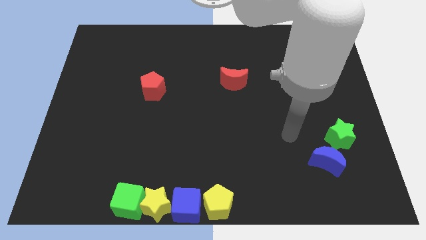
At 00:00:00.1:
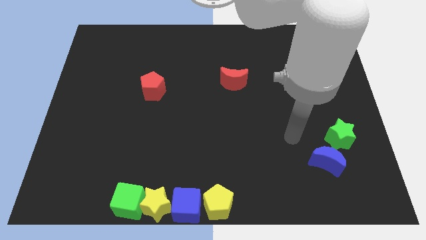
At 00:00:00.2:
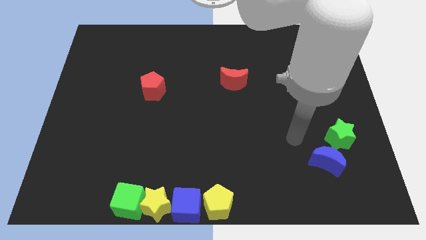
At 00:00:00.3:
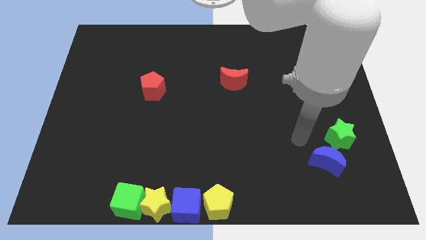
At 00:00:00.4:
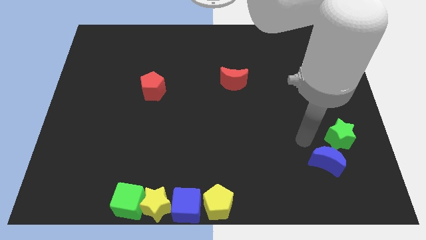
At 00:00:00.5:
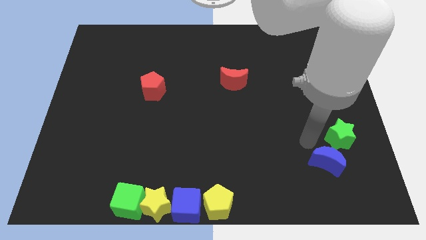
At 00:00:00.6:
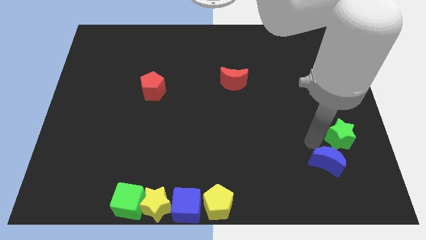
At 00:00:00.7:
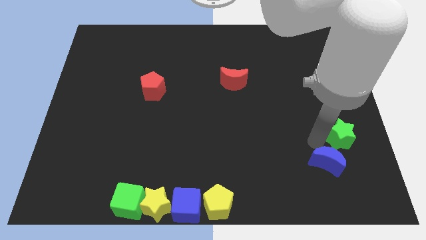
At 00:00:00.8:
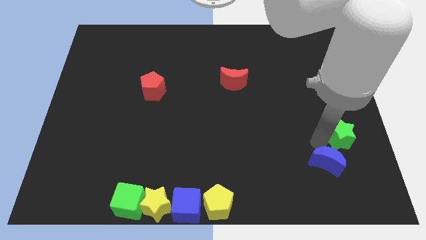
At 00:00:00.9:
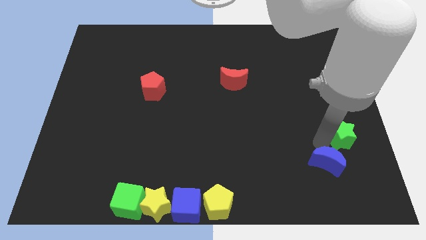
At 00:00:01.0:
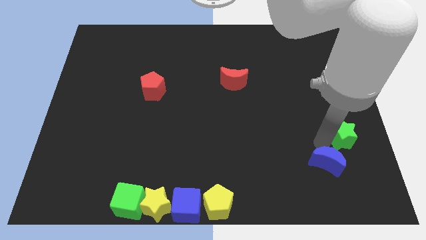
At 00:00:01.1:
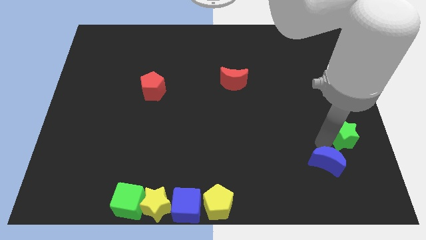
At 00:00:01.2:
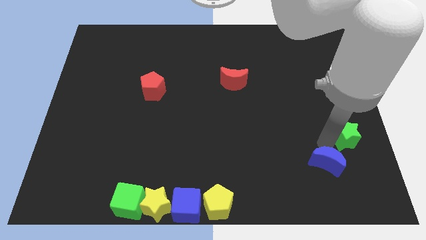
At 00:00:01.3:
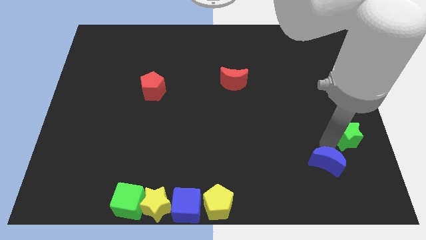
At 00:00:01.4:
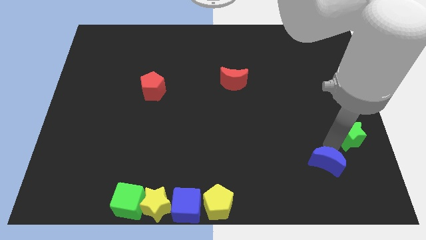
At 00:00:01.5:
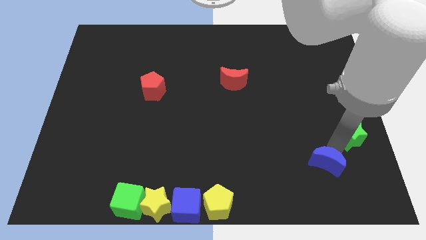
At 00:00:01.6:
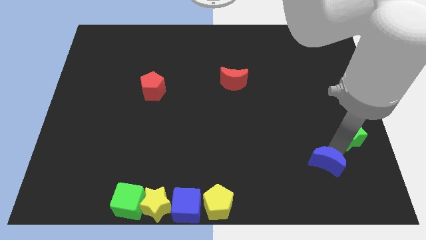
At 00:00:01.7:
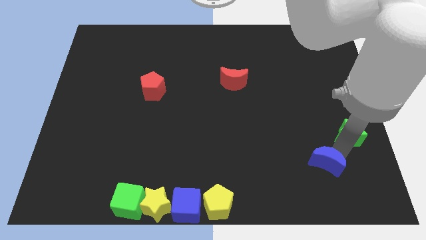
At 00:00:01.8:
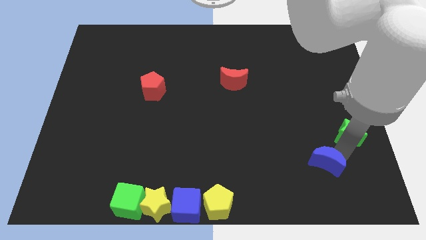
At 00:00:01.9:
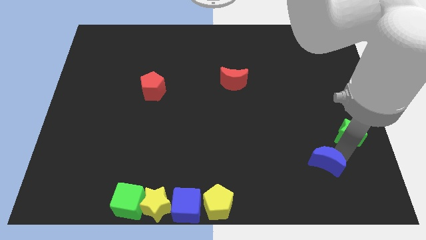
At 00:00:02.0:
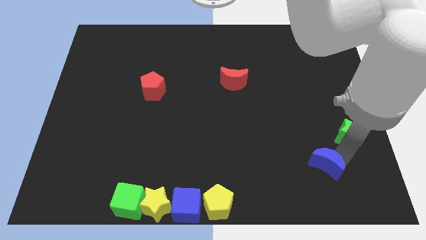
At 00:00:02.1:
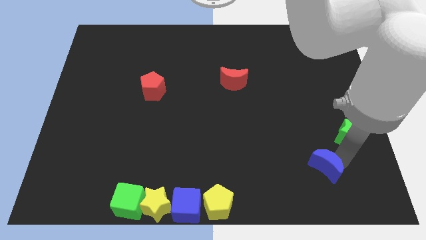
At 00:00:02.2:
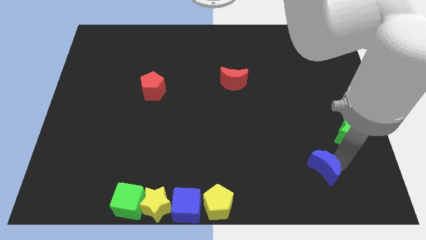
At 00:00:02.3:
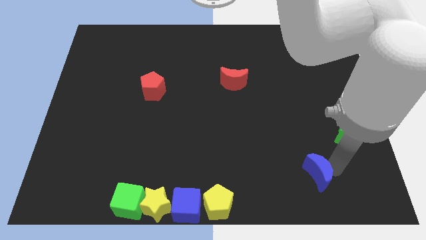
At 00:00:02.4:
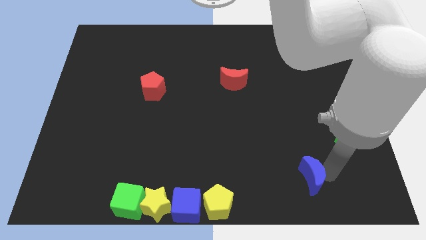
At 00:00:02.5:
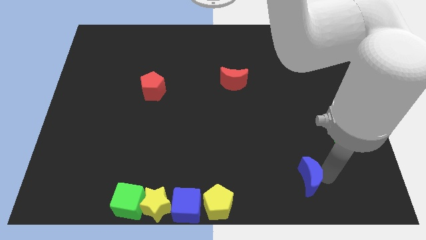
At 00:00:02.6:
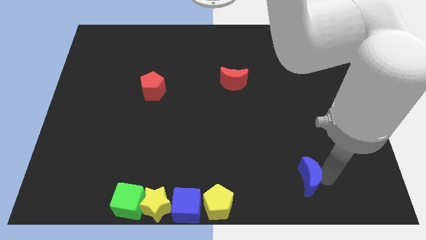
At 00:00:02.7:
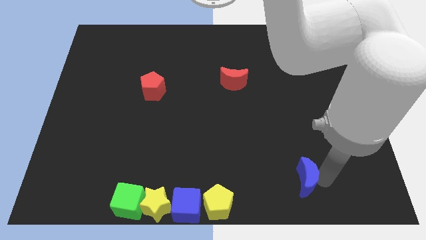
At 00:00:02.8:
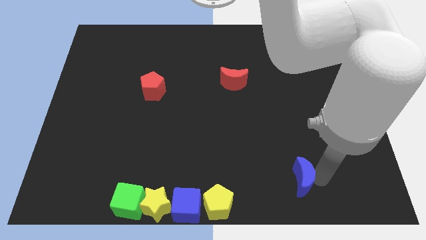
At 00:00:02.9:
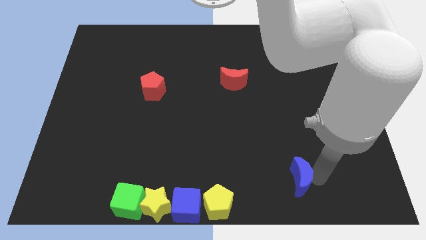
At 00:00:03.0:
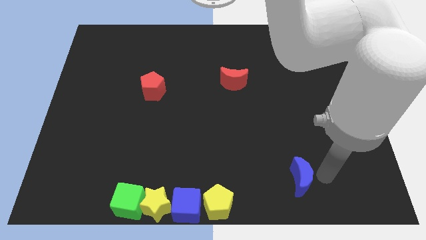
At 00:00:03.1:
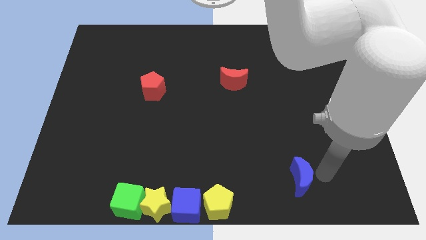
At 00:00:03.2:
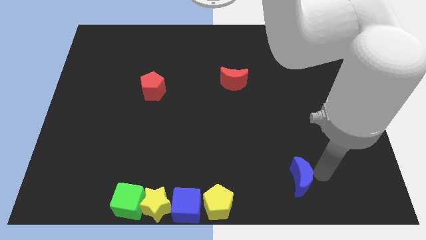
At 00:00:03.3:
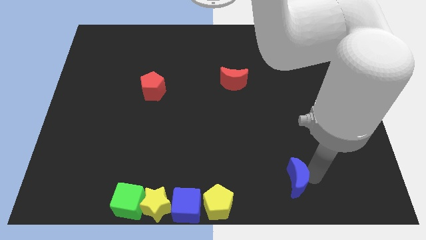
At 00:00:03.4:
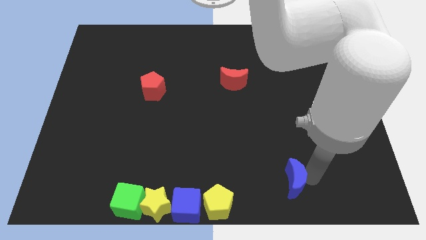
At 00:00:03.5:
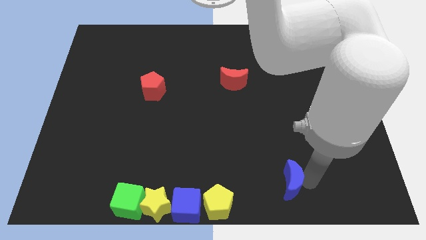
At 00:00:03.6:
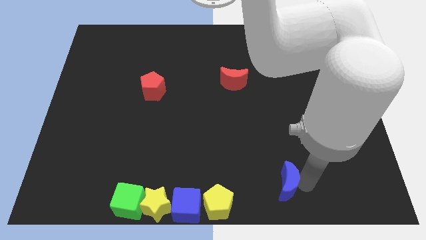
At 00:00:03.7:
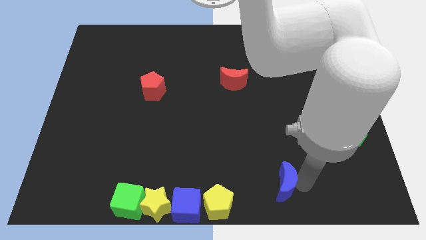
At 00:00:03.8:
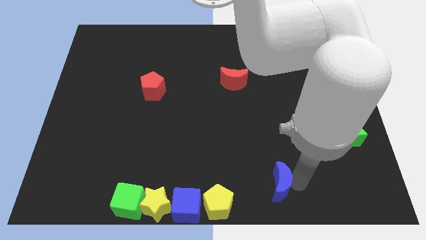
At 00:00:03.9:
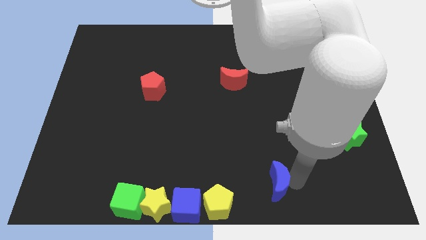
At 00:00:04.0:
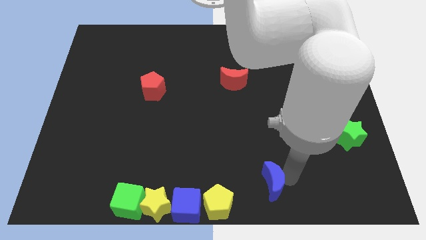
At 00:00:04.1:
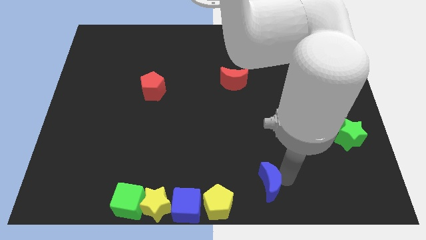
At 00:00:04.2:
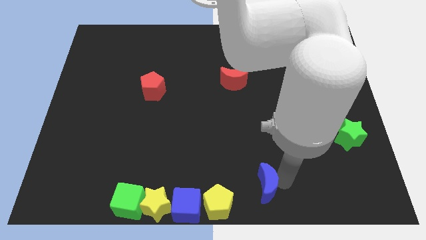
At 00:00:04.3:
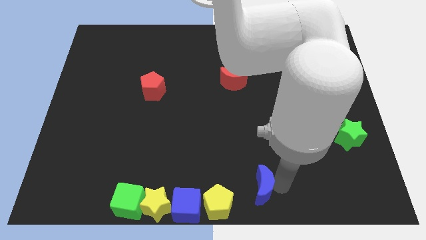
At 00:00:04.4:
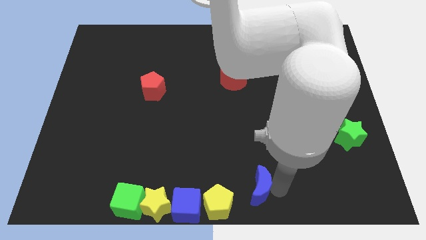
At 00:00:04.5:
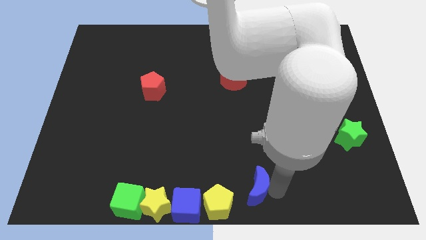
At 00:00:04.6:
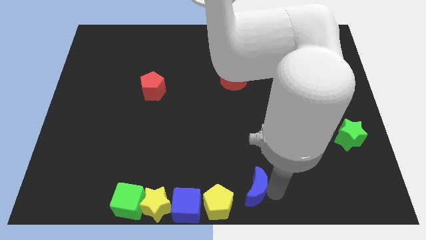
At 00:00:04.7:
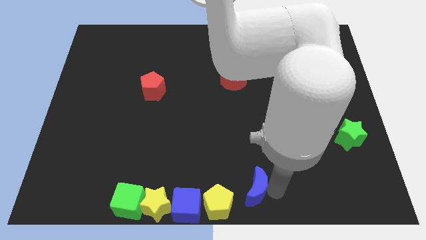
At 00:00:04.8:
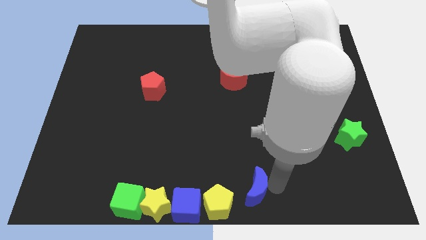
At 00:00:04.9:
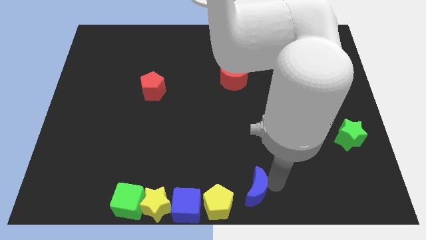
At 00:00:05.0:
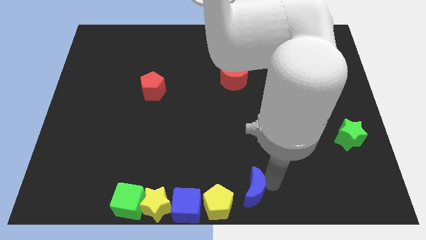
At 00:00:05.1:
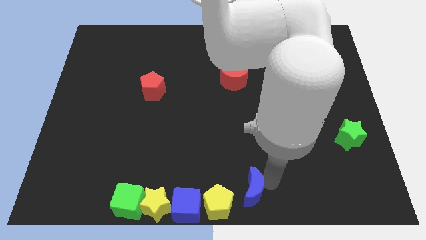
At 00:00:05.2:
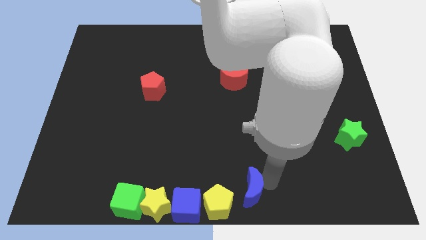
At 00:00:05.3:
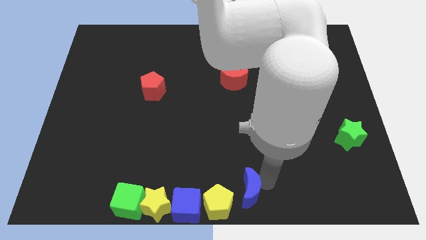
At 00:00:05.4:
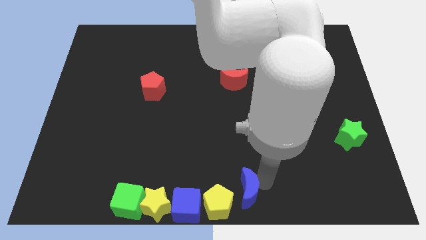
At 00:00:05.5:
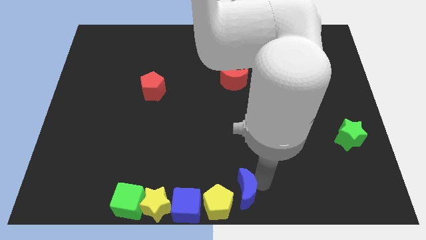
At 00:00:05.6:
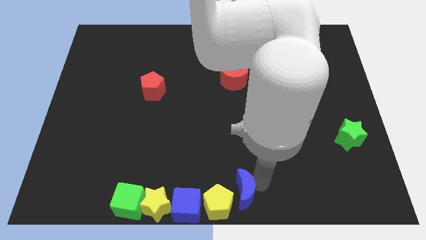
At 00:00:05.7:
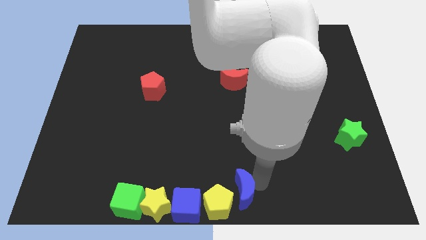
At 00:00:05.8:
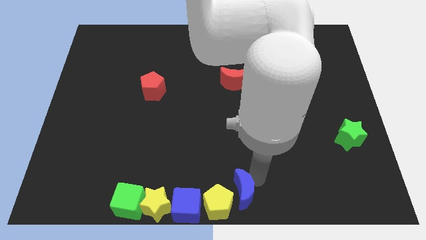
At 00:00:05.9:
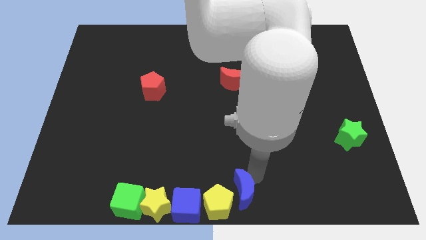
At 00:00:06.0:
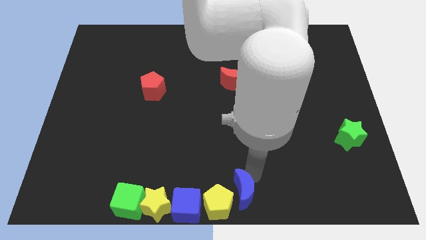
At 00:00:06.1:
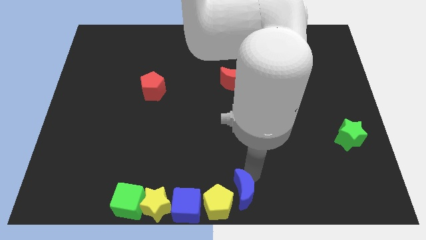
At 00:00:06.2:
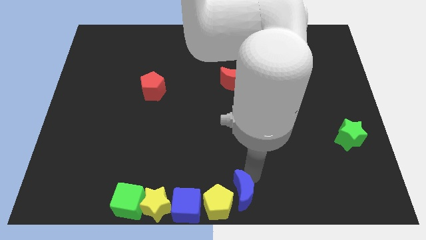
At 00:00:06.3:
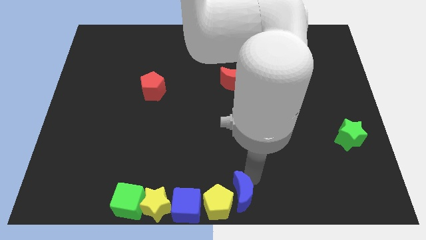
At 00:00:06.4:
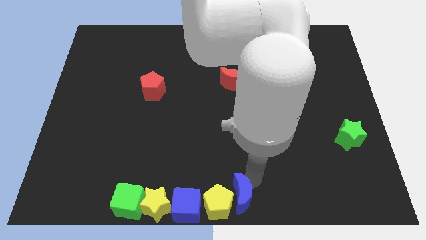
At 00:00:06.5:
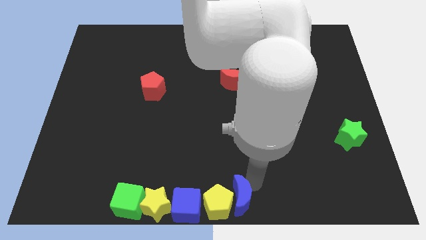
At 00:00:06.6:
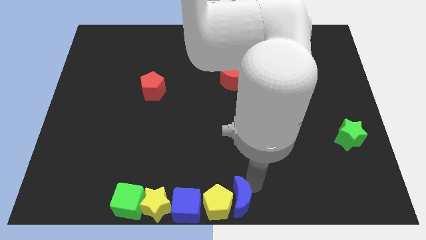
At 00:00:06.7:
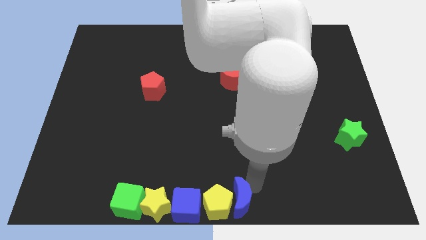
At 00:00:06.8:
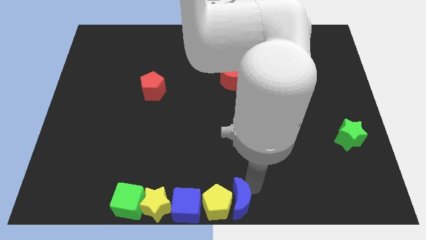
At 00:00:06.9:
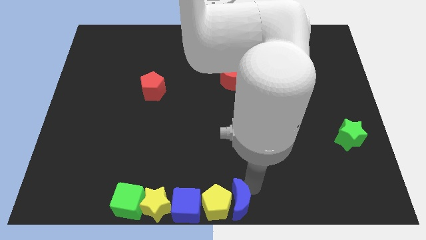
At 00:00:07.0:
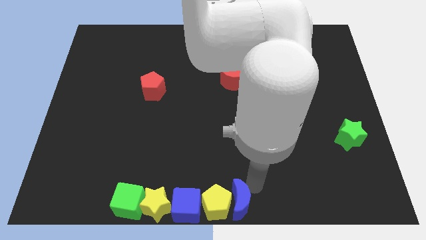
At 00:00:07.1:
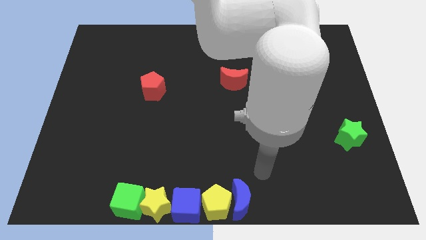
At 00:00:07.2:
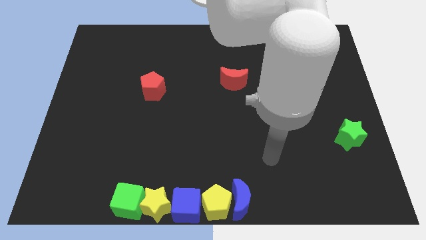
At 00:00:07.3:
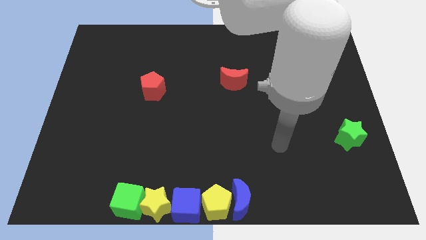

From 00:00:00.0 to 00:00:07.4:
move the blue crescent right beside the yellow pentagon

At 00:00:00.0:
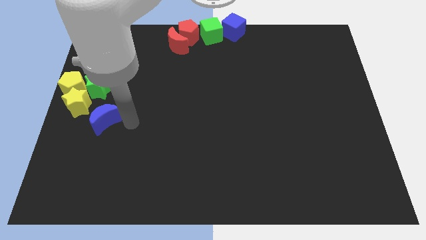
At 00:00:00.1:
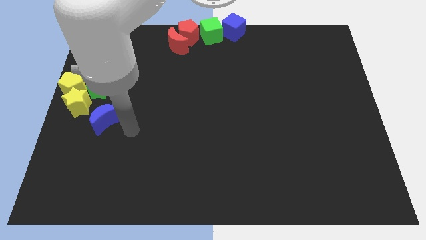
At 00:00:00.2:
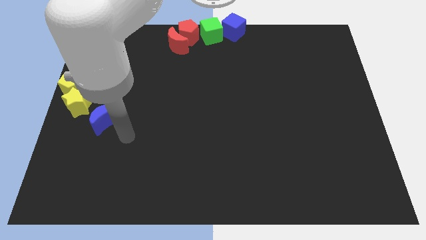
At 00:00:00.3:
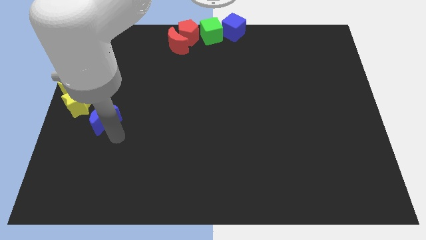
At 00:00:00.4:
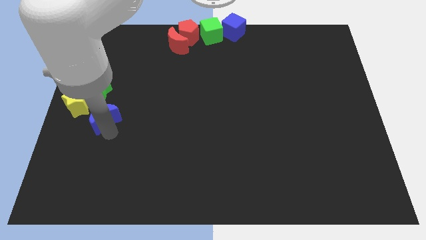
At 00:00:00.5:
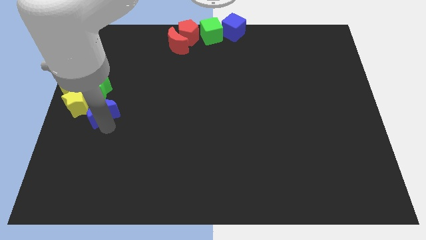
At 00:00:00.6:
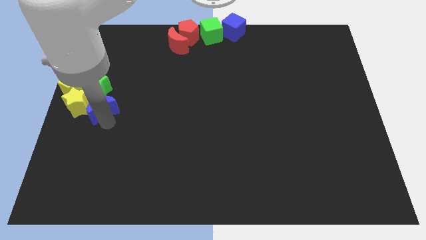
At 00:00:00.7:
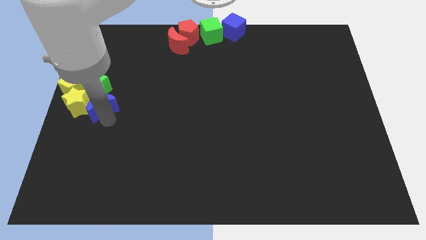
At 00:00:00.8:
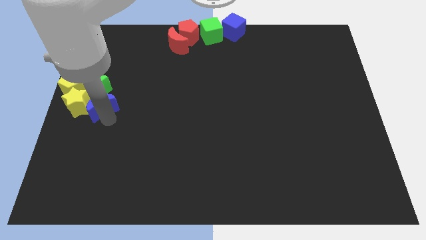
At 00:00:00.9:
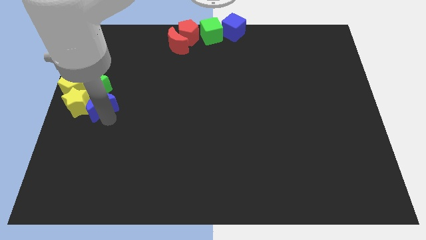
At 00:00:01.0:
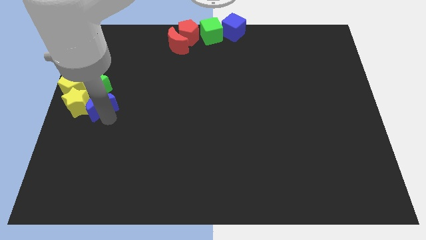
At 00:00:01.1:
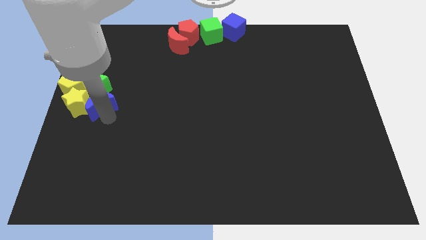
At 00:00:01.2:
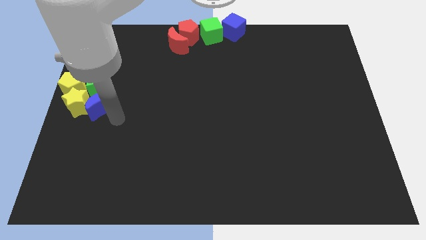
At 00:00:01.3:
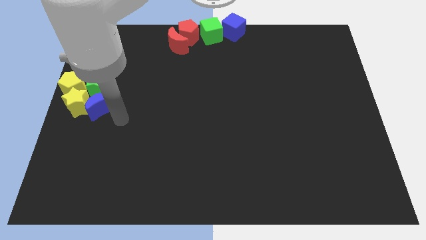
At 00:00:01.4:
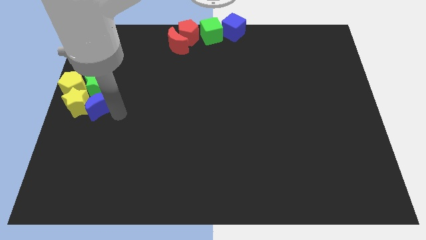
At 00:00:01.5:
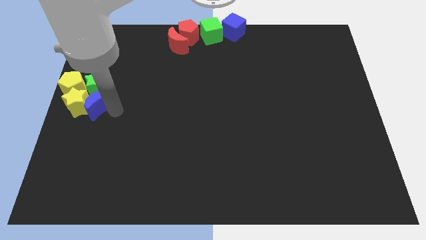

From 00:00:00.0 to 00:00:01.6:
place blue moon to the right side of the yellow star
